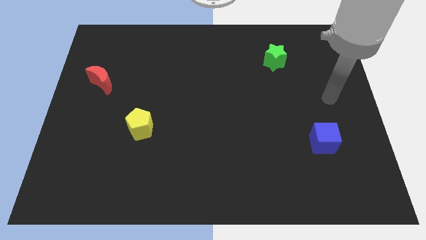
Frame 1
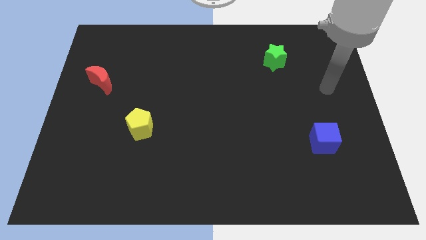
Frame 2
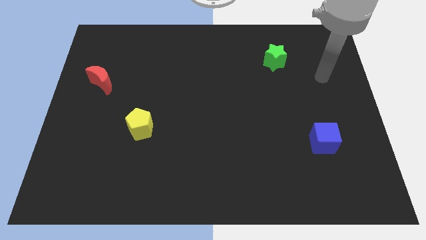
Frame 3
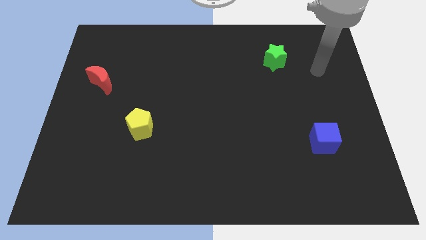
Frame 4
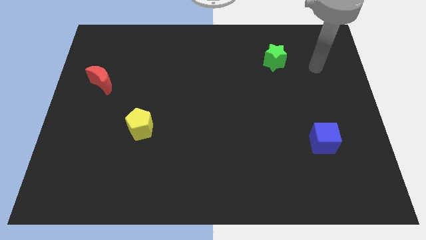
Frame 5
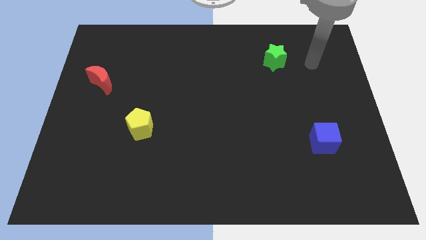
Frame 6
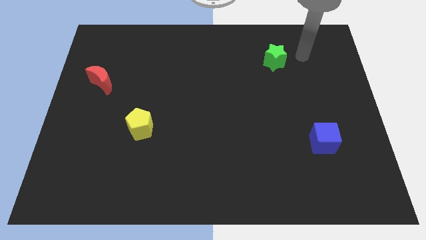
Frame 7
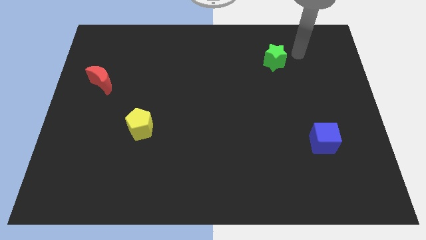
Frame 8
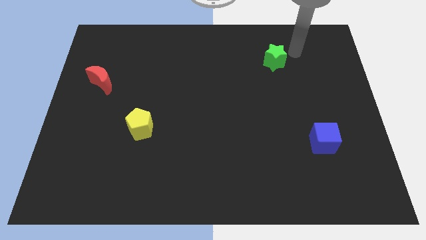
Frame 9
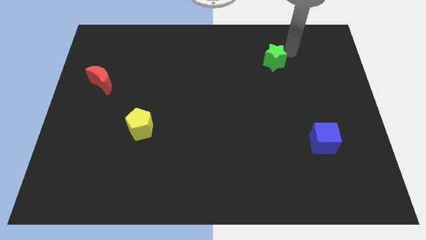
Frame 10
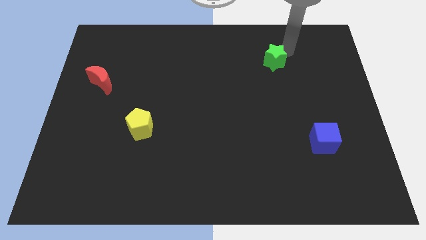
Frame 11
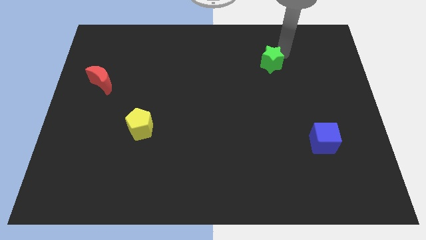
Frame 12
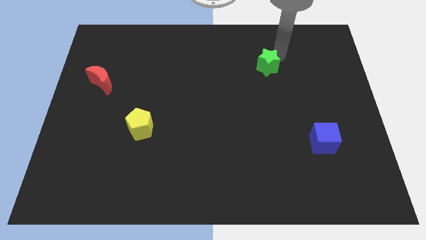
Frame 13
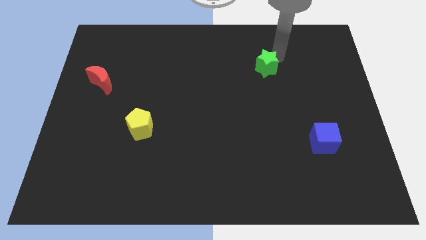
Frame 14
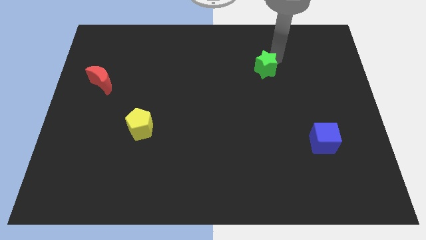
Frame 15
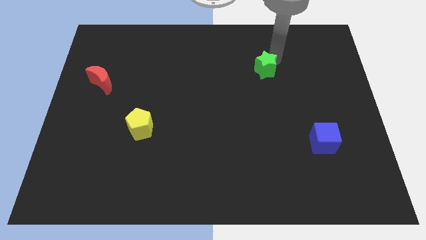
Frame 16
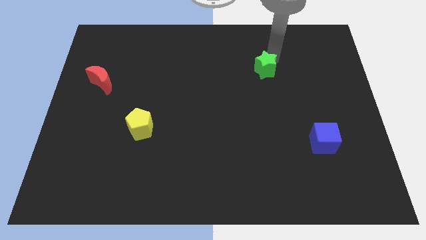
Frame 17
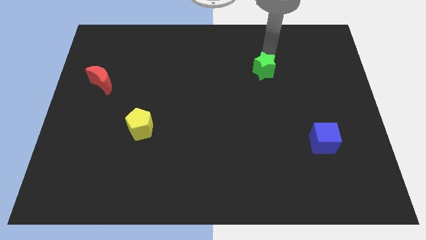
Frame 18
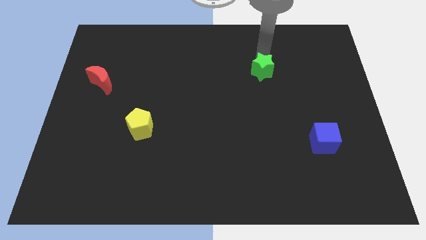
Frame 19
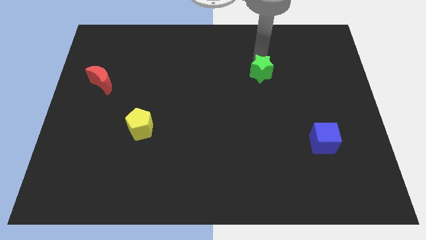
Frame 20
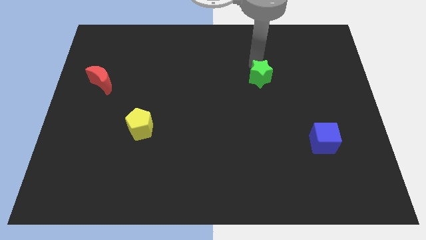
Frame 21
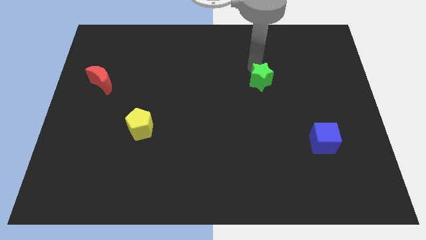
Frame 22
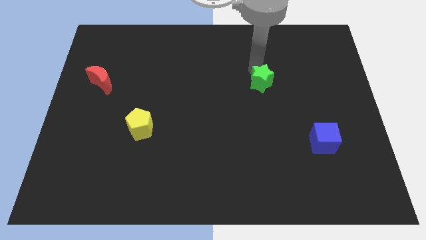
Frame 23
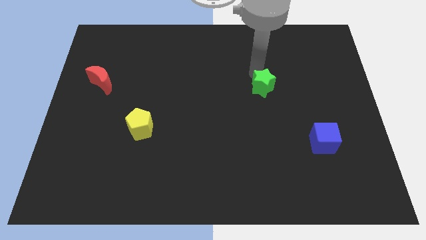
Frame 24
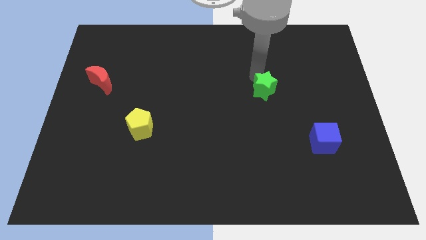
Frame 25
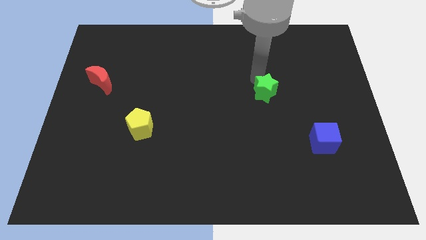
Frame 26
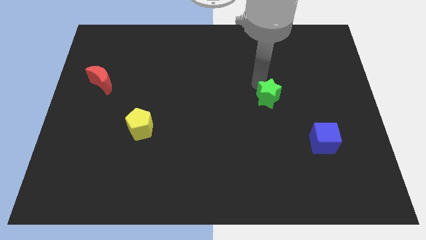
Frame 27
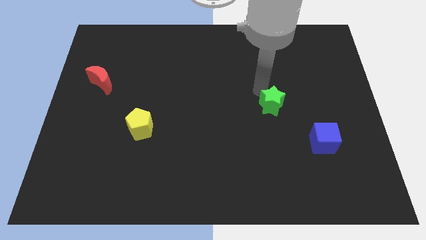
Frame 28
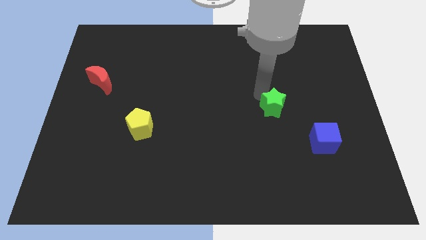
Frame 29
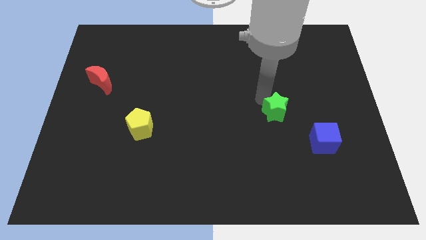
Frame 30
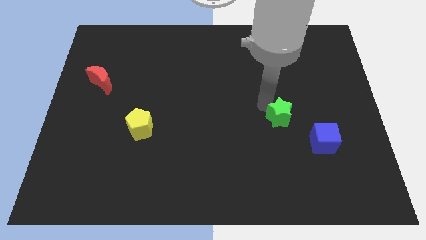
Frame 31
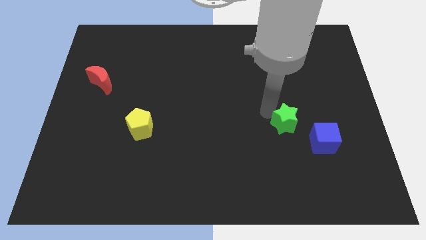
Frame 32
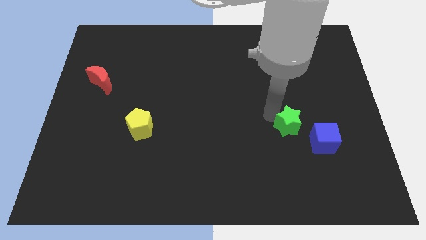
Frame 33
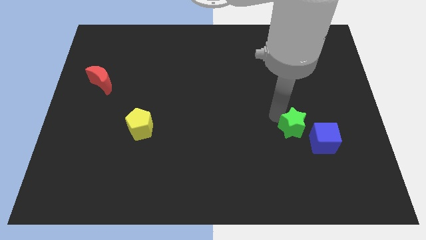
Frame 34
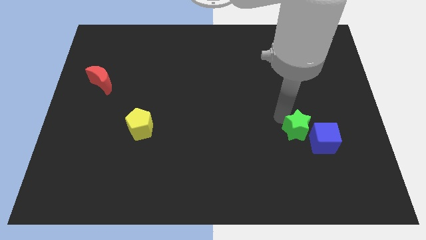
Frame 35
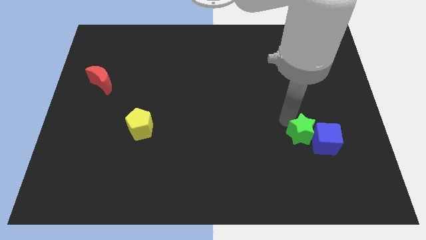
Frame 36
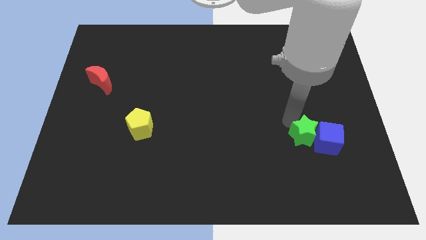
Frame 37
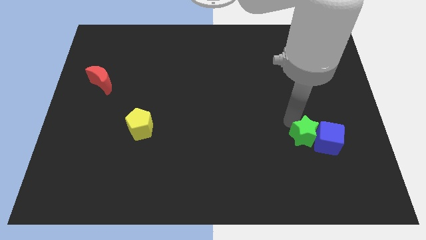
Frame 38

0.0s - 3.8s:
put the green star next to the blue cube

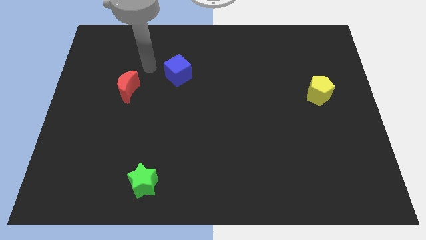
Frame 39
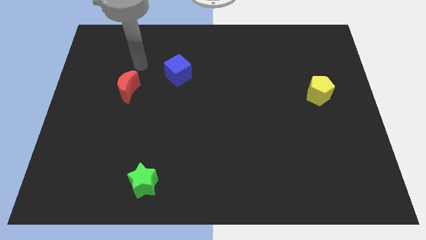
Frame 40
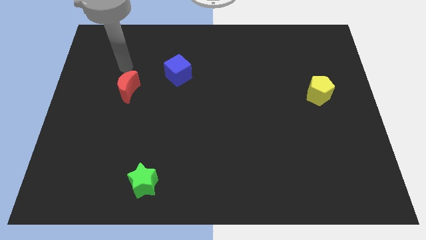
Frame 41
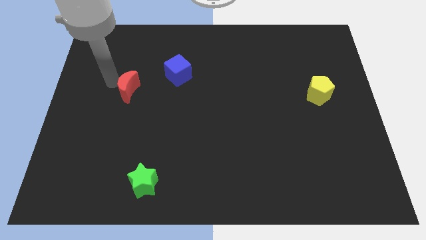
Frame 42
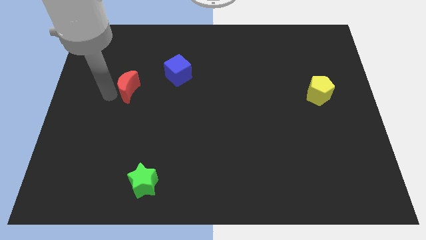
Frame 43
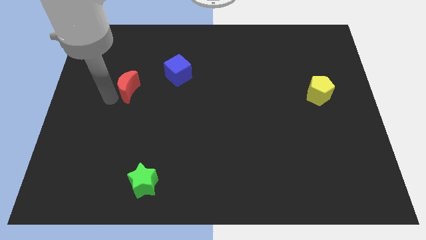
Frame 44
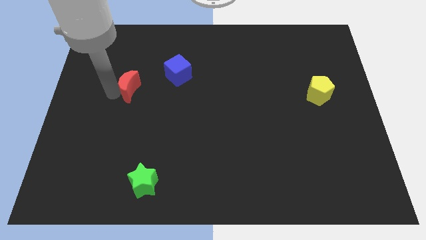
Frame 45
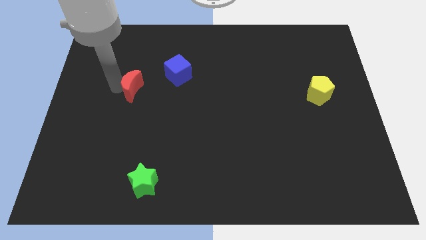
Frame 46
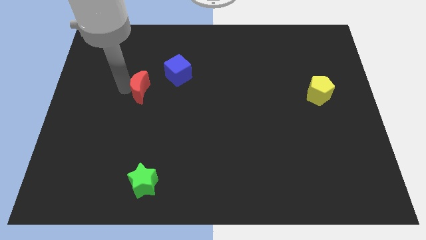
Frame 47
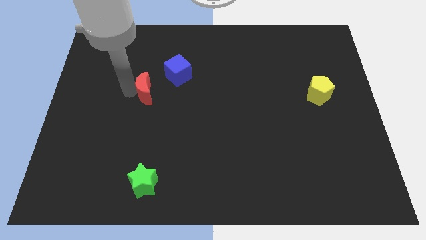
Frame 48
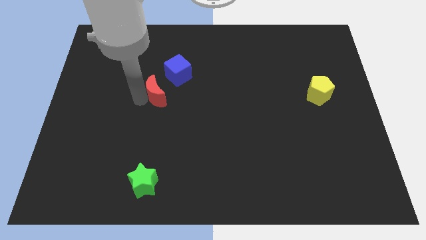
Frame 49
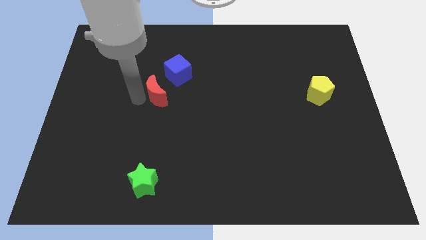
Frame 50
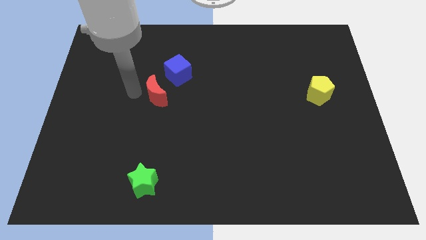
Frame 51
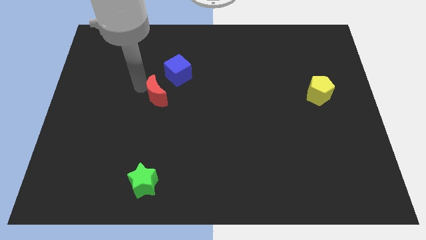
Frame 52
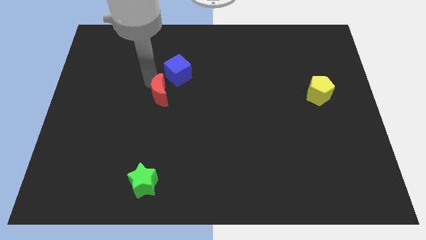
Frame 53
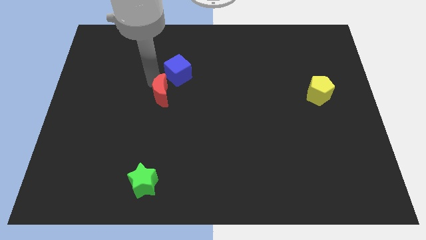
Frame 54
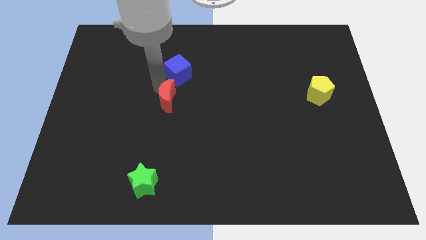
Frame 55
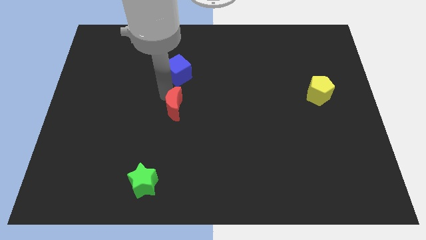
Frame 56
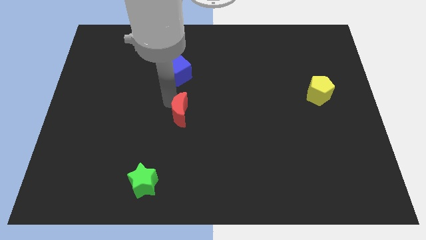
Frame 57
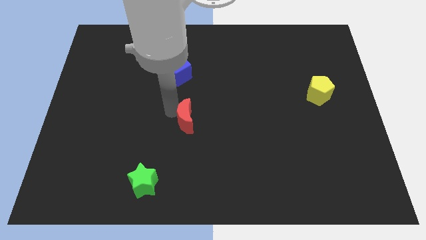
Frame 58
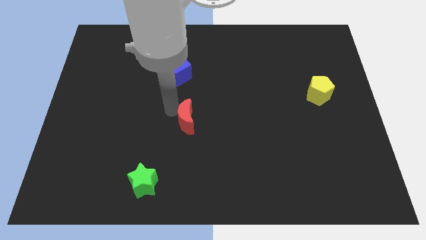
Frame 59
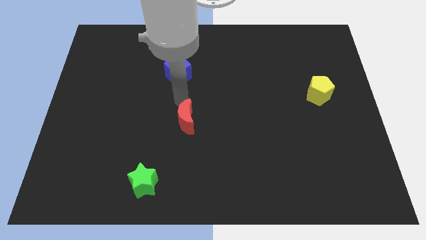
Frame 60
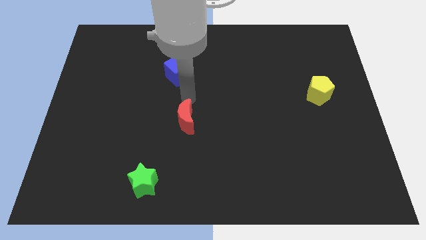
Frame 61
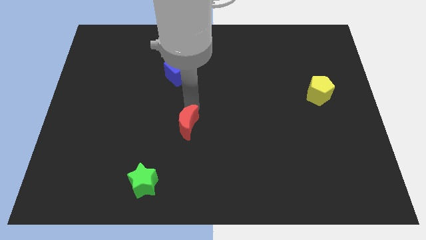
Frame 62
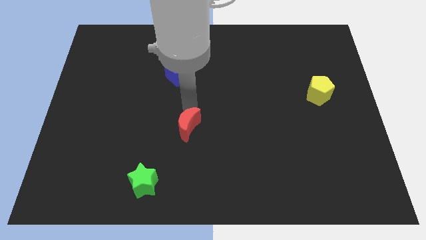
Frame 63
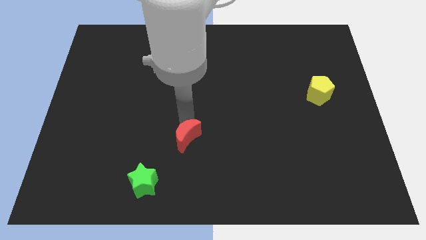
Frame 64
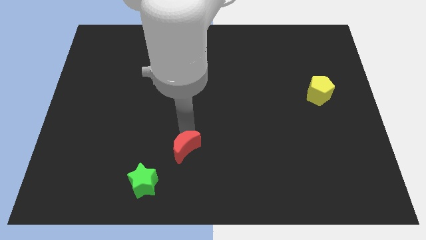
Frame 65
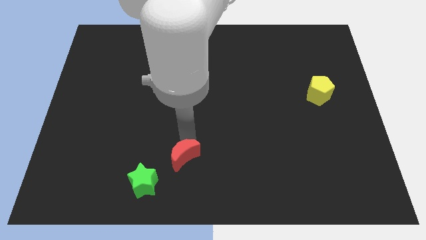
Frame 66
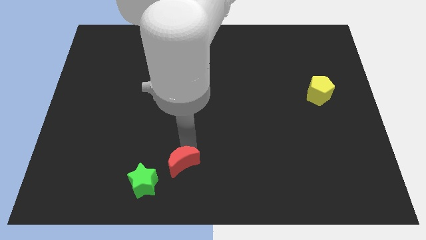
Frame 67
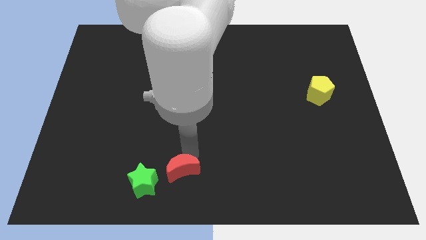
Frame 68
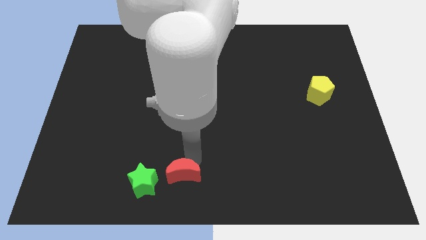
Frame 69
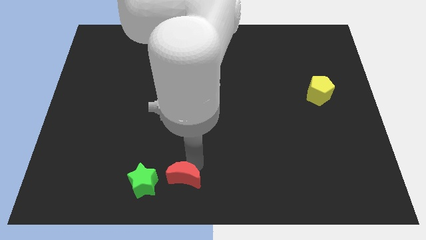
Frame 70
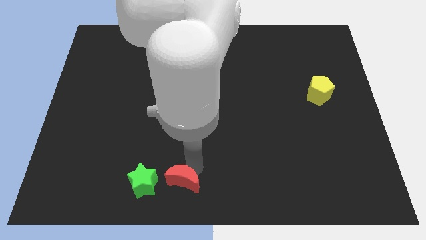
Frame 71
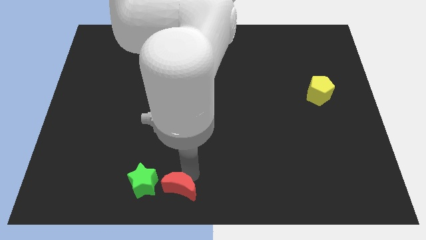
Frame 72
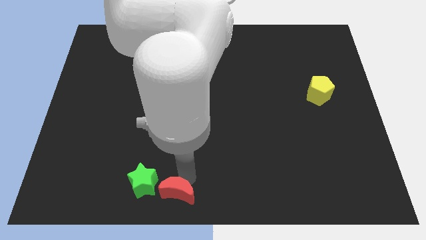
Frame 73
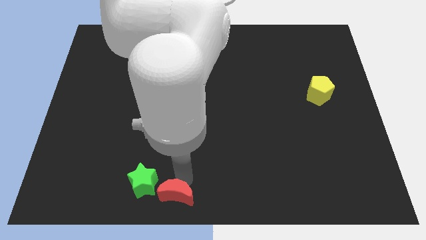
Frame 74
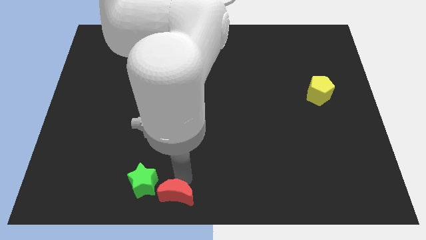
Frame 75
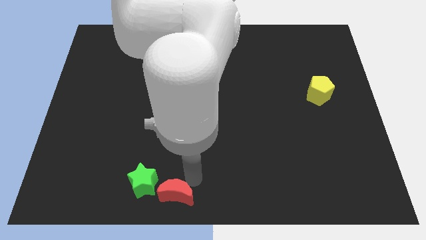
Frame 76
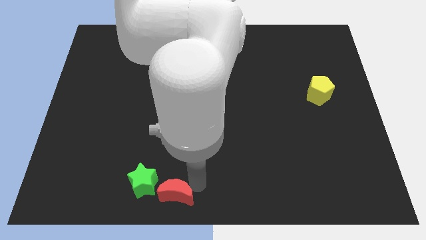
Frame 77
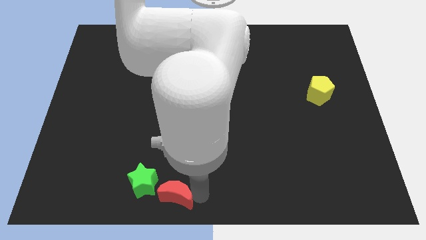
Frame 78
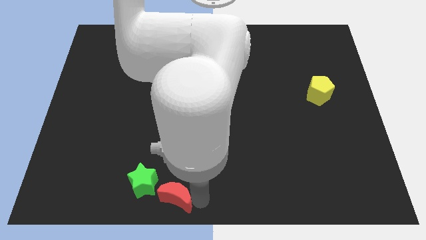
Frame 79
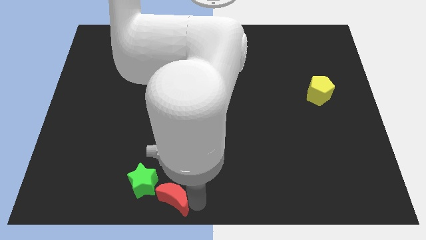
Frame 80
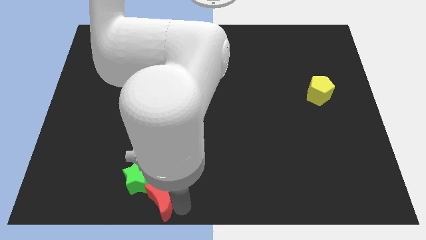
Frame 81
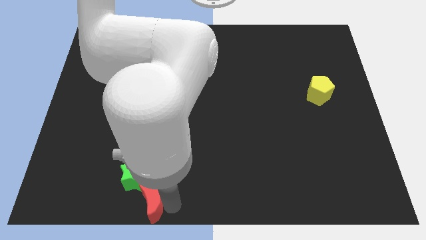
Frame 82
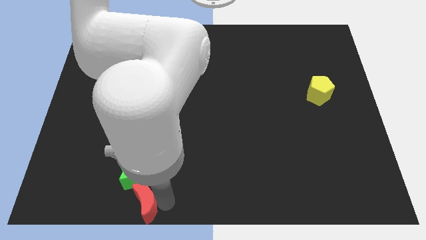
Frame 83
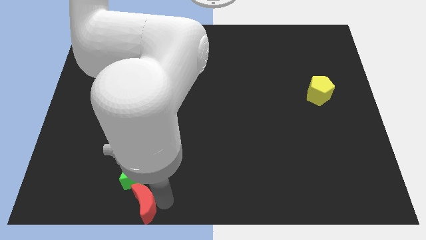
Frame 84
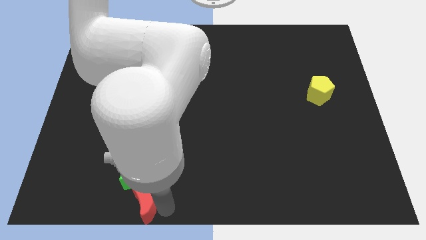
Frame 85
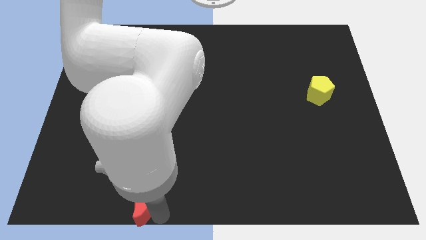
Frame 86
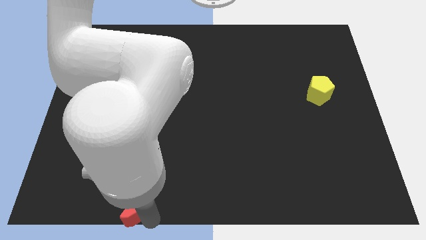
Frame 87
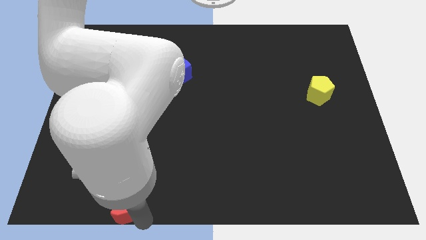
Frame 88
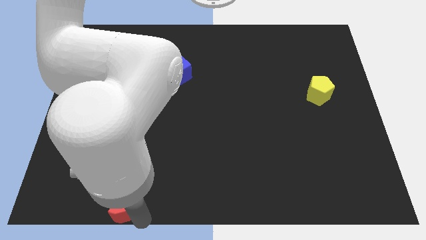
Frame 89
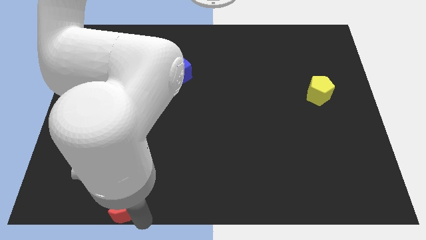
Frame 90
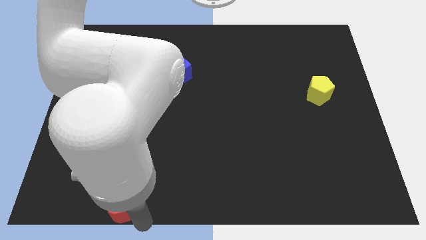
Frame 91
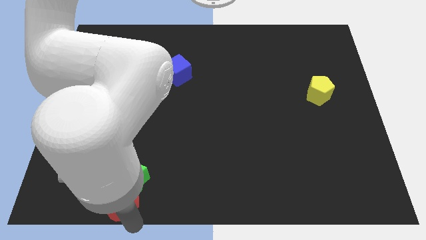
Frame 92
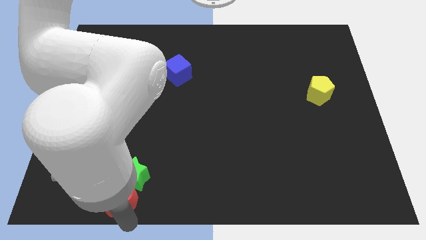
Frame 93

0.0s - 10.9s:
slide the red moon next to the green block
